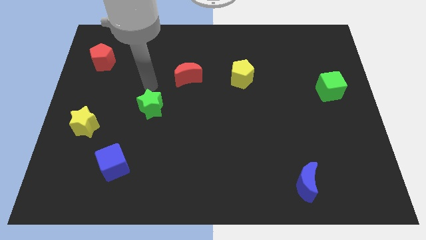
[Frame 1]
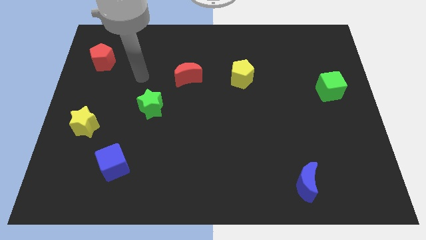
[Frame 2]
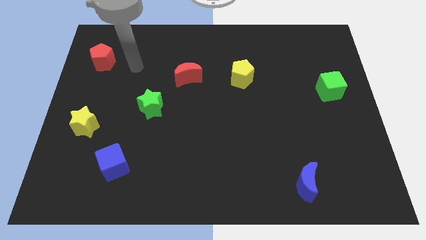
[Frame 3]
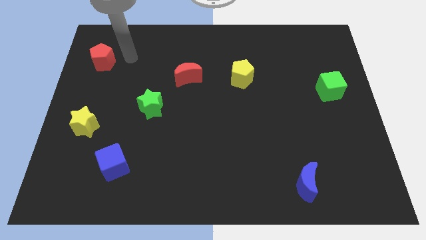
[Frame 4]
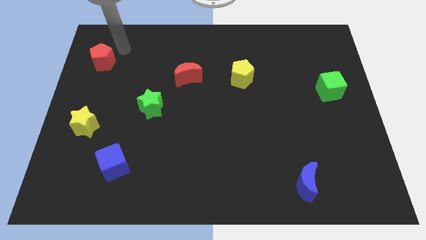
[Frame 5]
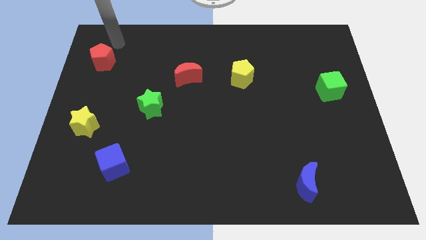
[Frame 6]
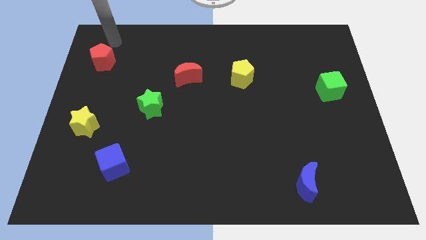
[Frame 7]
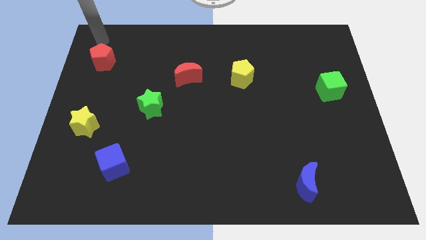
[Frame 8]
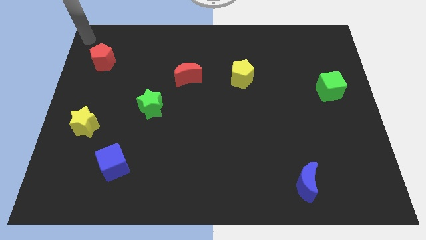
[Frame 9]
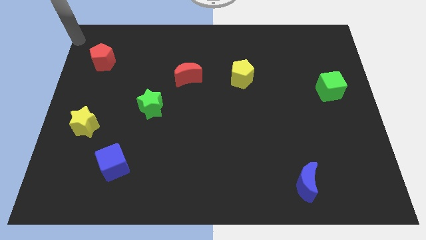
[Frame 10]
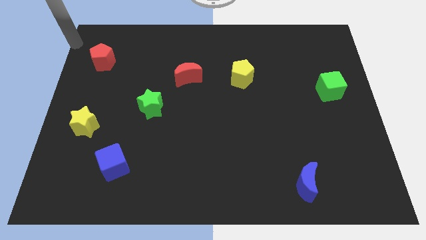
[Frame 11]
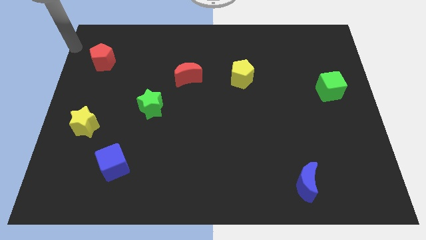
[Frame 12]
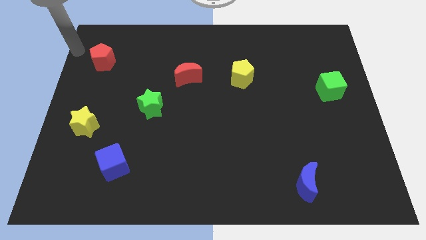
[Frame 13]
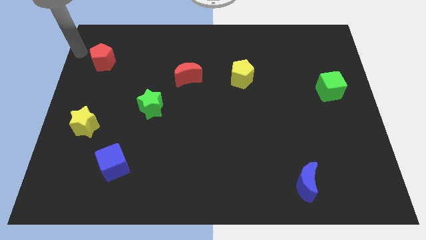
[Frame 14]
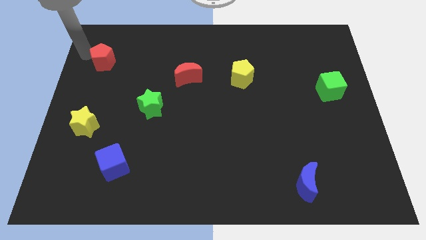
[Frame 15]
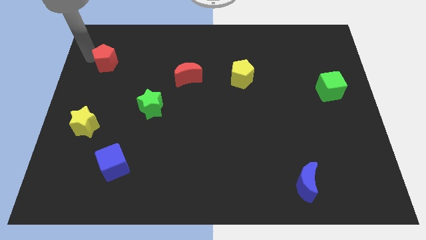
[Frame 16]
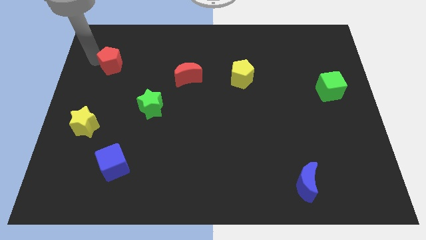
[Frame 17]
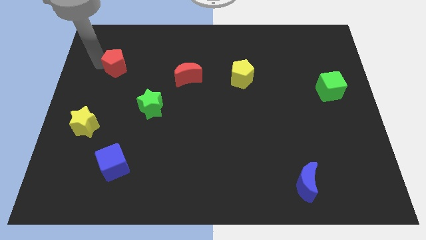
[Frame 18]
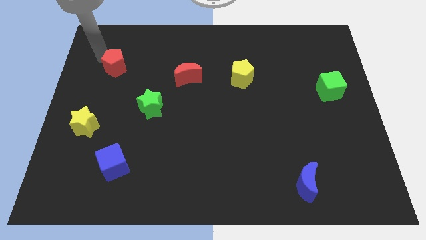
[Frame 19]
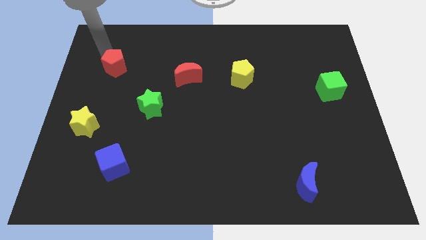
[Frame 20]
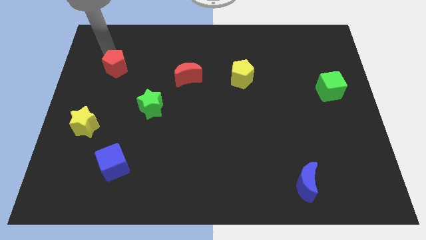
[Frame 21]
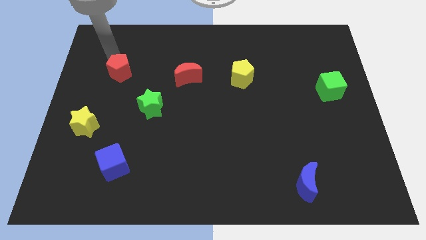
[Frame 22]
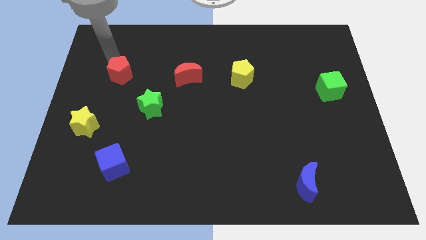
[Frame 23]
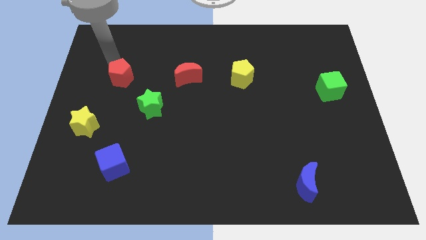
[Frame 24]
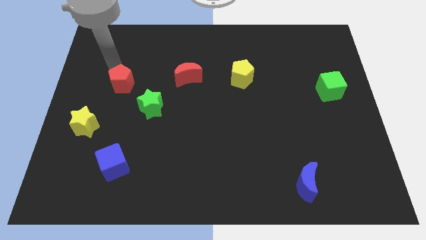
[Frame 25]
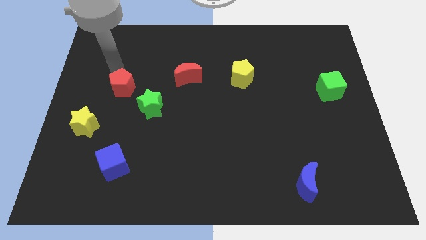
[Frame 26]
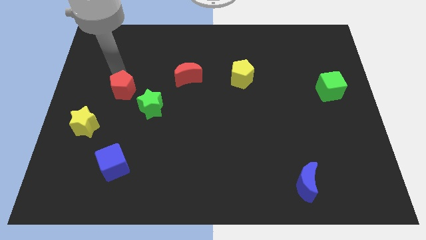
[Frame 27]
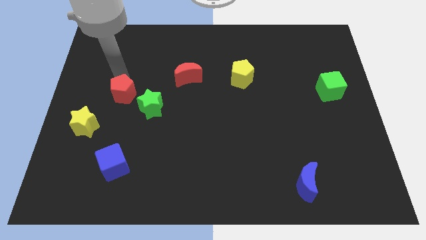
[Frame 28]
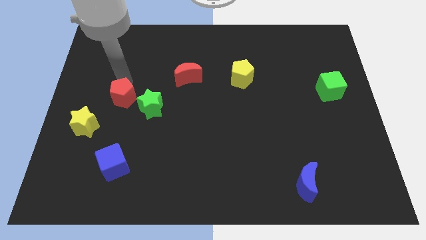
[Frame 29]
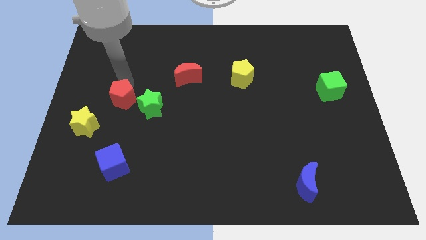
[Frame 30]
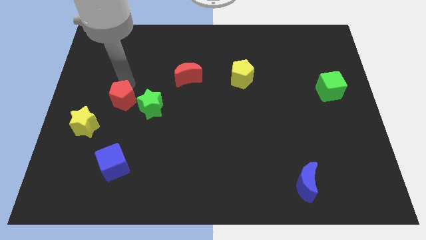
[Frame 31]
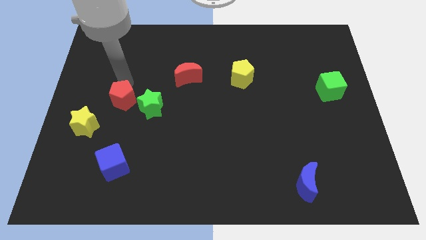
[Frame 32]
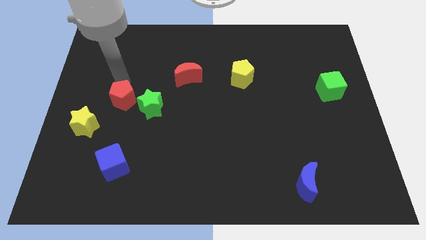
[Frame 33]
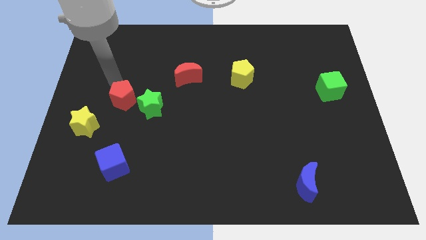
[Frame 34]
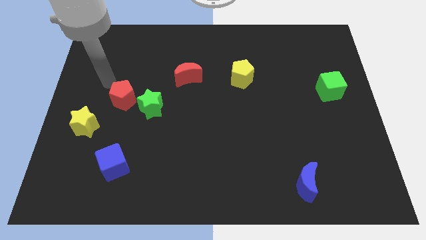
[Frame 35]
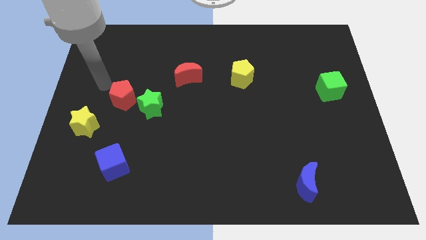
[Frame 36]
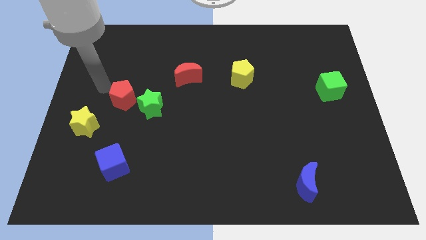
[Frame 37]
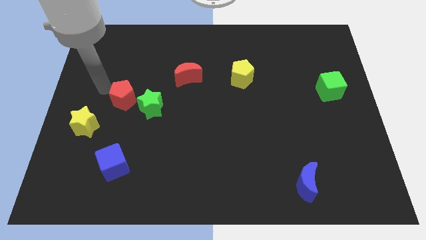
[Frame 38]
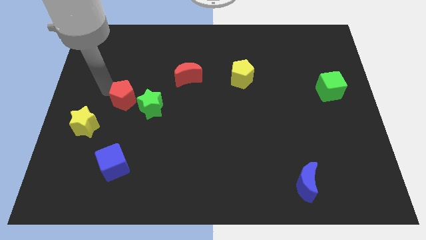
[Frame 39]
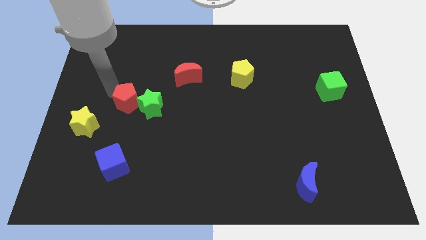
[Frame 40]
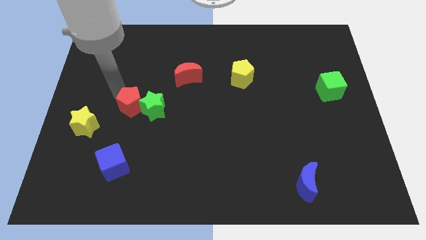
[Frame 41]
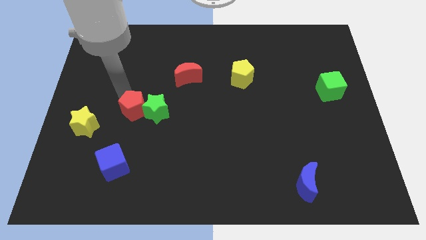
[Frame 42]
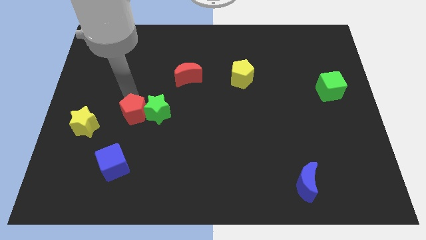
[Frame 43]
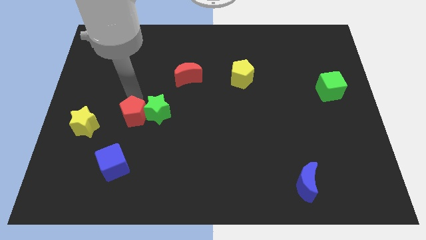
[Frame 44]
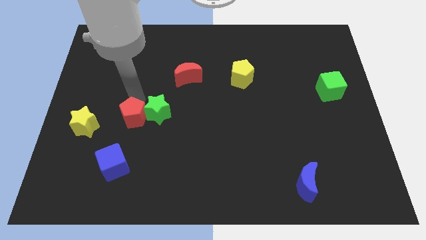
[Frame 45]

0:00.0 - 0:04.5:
push the red pentagon to the left of the green star

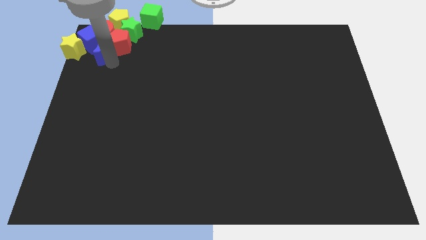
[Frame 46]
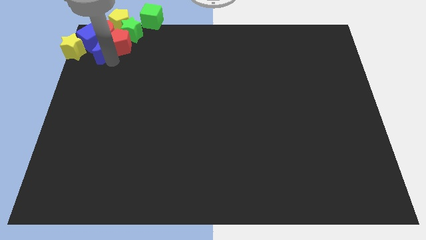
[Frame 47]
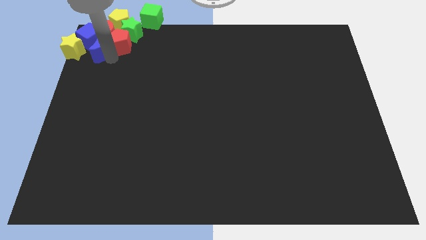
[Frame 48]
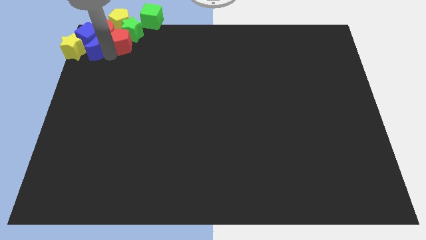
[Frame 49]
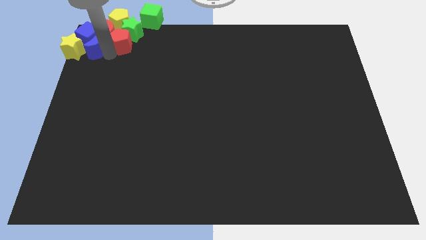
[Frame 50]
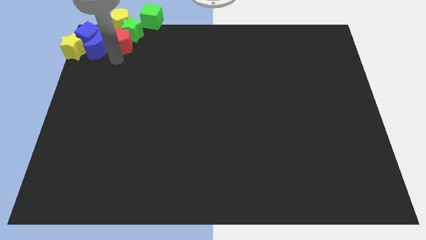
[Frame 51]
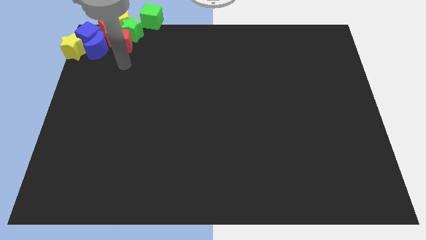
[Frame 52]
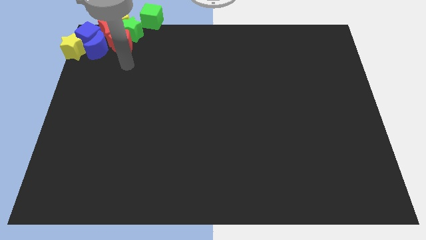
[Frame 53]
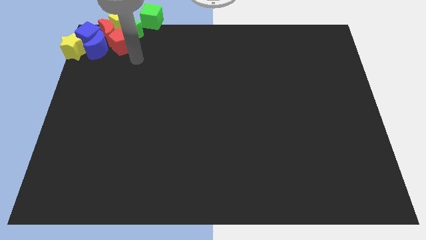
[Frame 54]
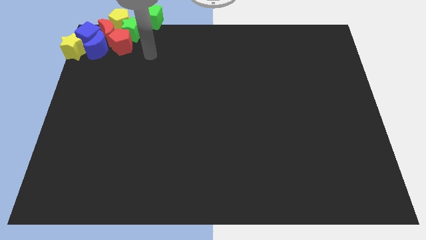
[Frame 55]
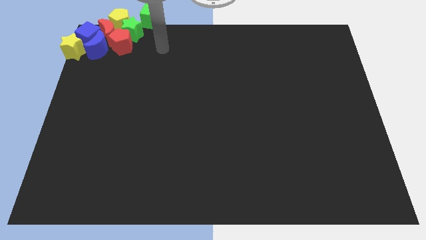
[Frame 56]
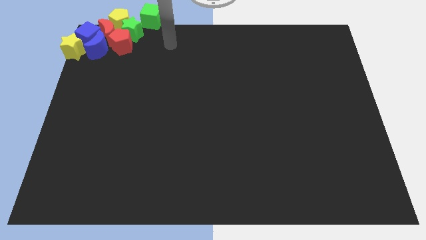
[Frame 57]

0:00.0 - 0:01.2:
point your arm at the right of the red pentagon

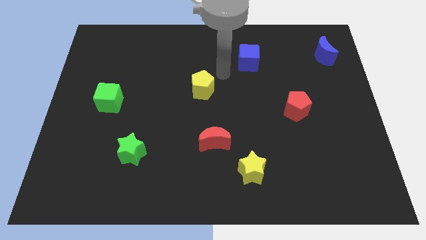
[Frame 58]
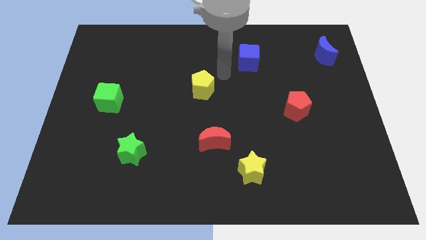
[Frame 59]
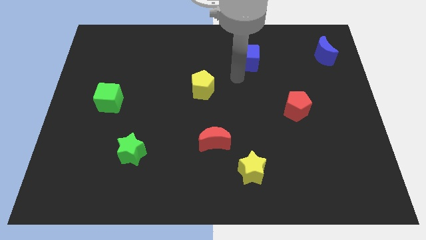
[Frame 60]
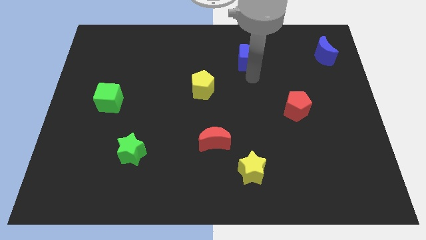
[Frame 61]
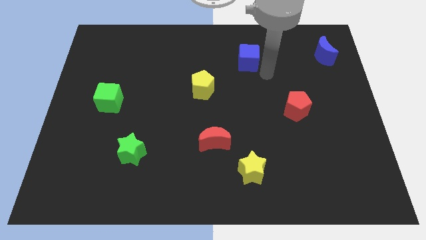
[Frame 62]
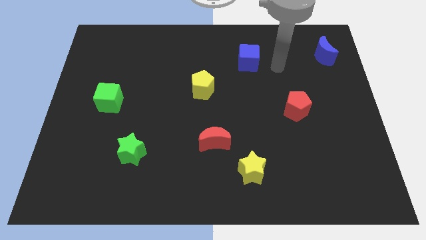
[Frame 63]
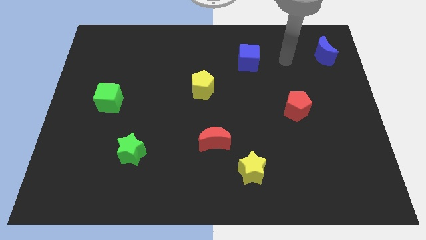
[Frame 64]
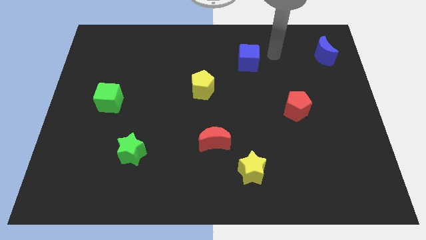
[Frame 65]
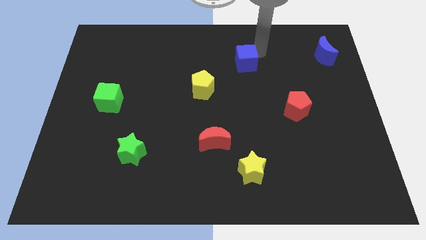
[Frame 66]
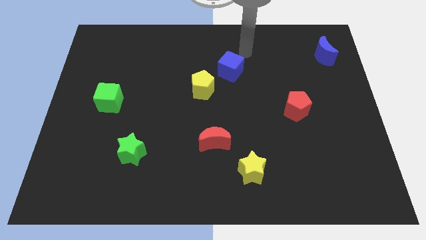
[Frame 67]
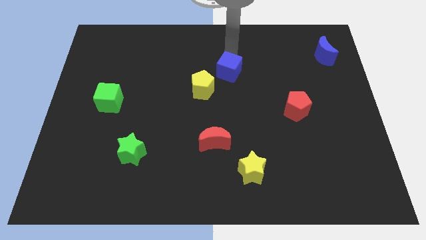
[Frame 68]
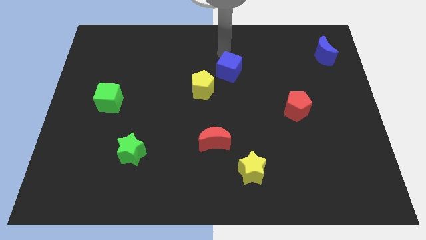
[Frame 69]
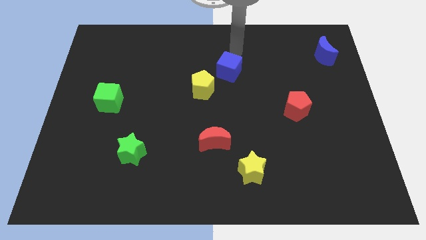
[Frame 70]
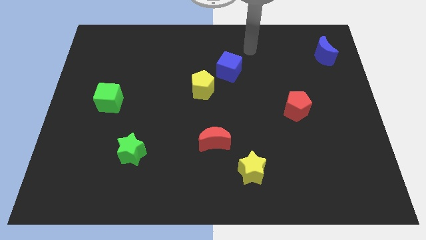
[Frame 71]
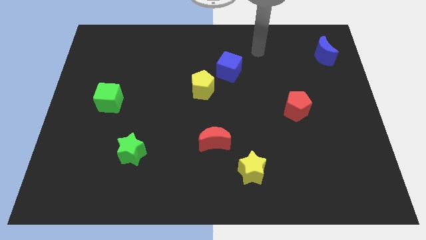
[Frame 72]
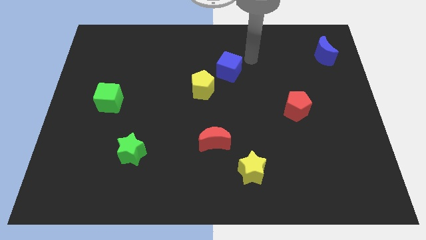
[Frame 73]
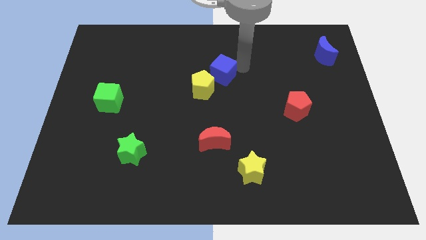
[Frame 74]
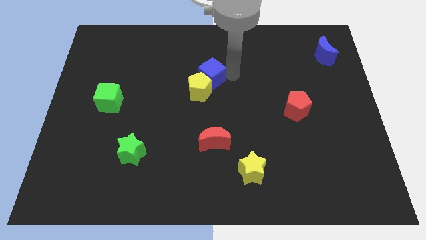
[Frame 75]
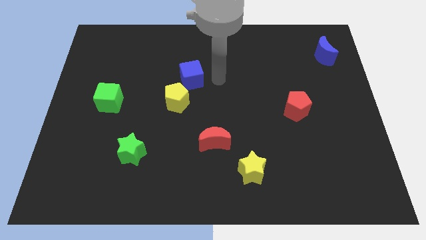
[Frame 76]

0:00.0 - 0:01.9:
push the blue cube into the yellow pentagon

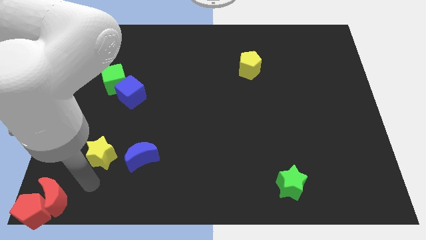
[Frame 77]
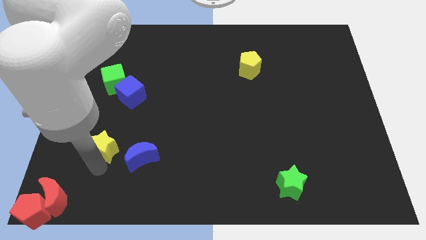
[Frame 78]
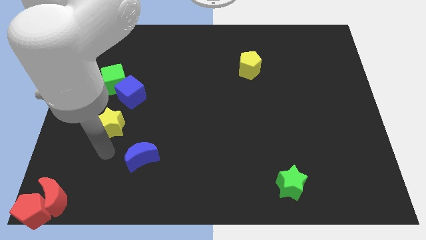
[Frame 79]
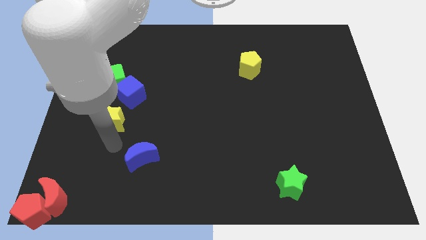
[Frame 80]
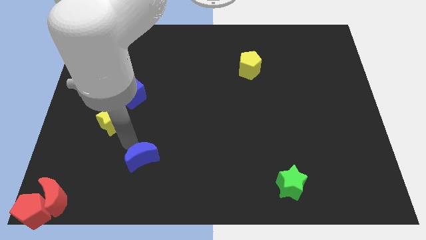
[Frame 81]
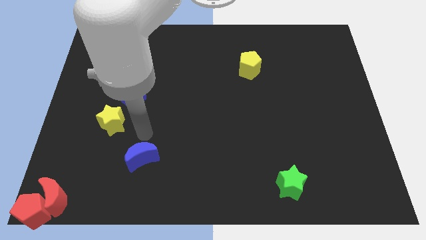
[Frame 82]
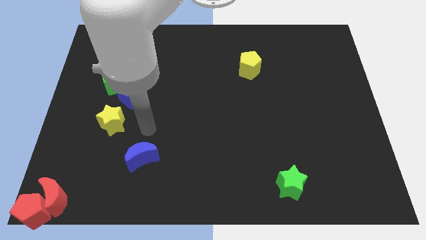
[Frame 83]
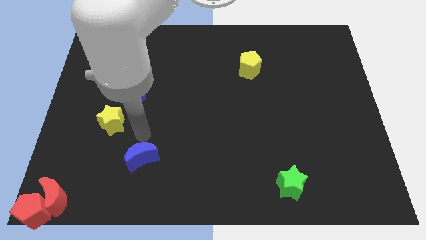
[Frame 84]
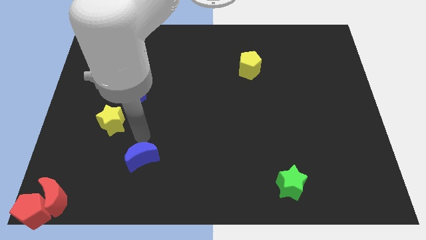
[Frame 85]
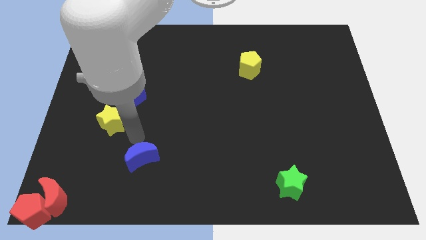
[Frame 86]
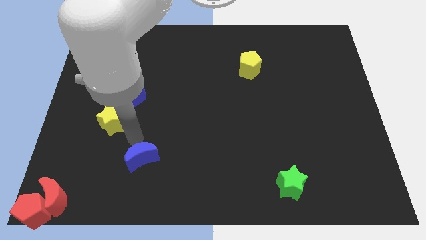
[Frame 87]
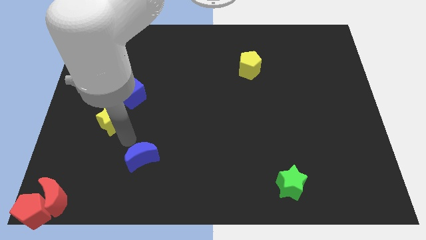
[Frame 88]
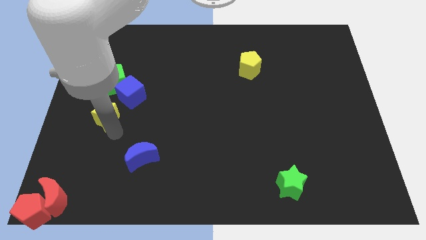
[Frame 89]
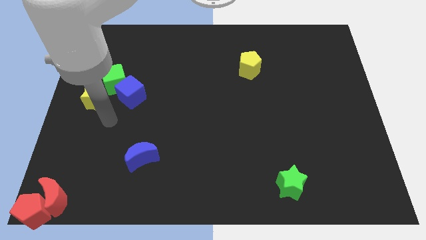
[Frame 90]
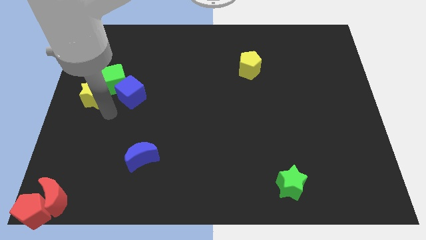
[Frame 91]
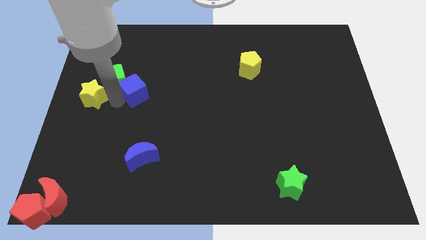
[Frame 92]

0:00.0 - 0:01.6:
put the yellow star to the left of the blue cube
